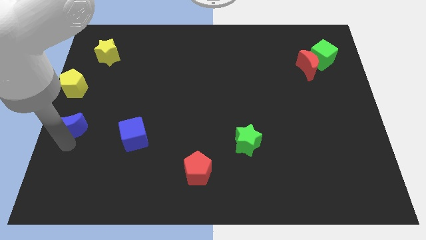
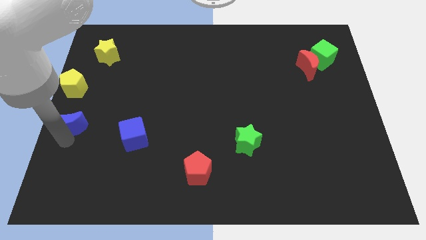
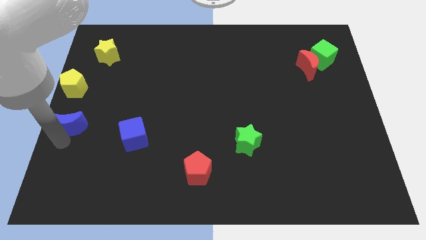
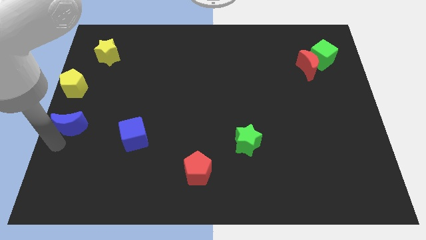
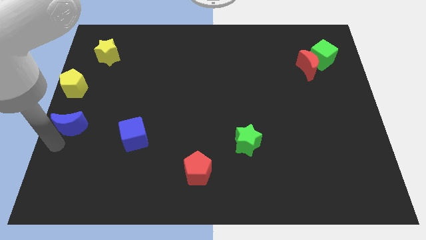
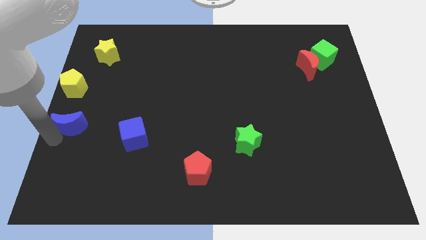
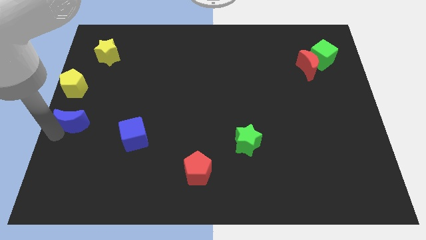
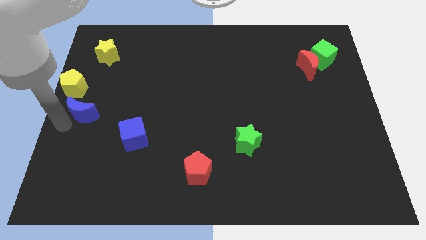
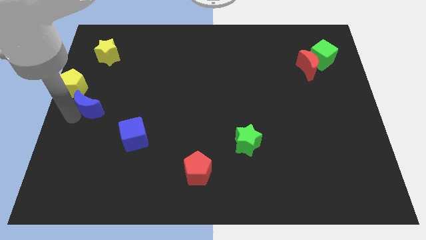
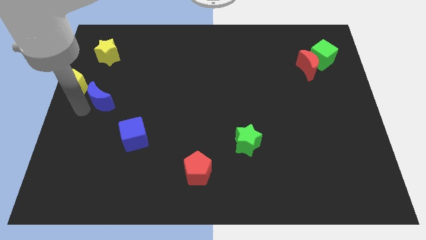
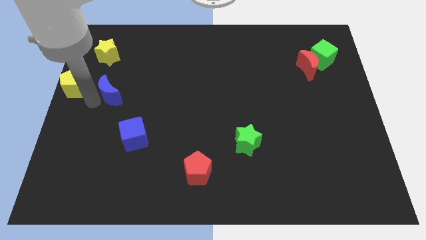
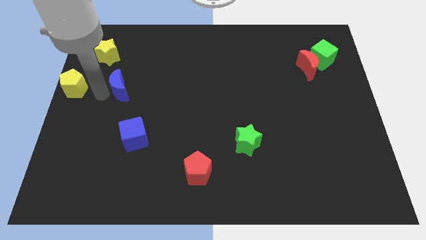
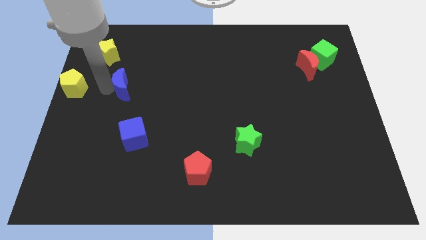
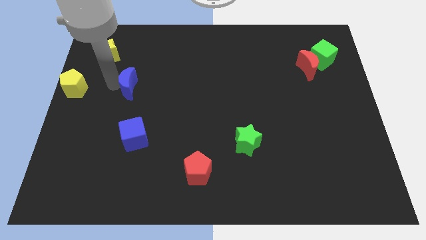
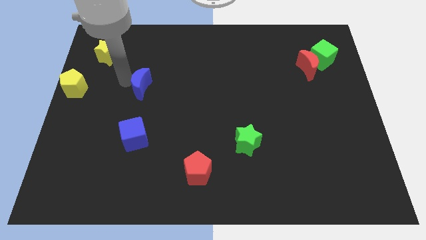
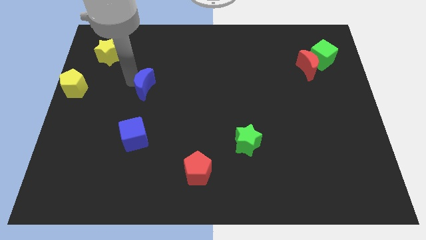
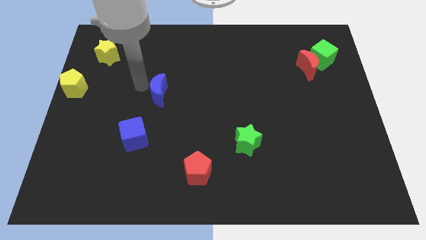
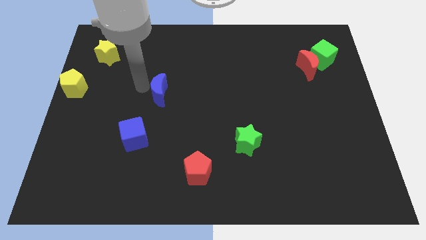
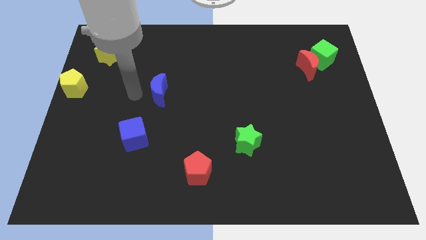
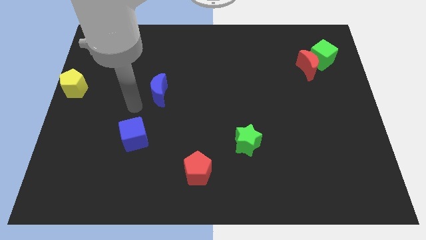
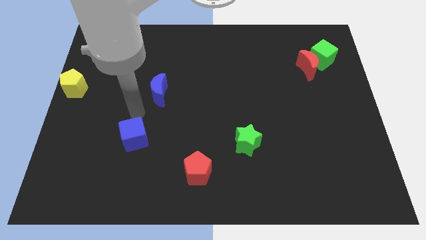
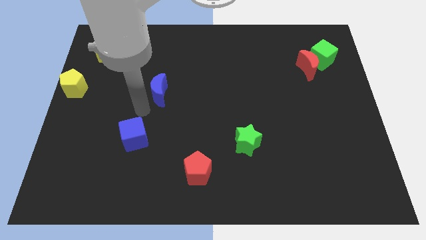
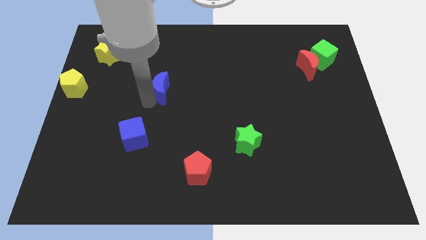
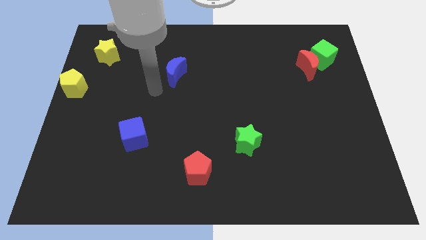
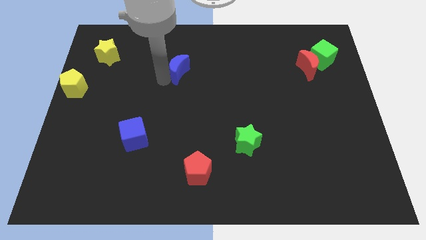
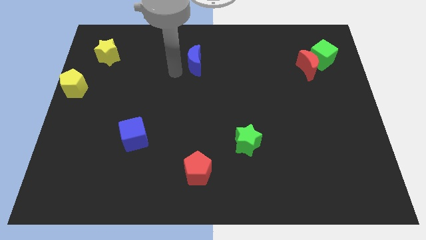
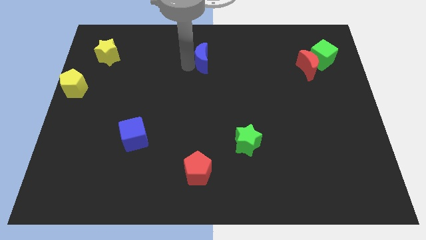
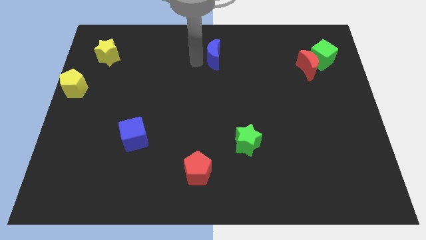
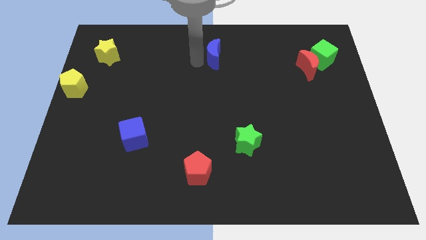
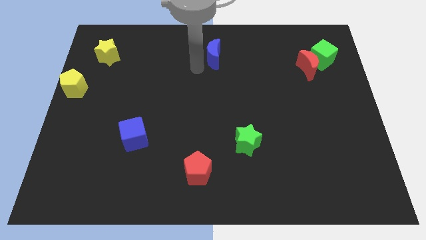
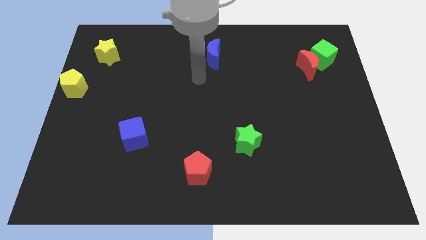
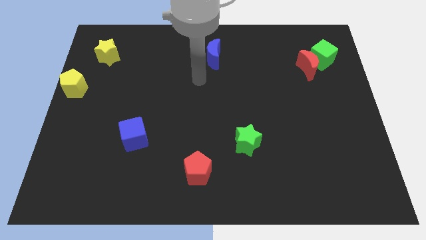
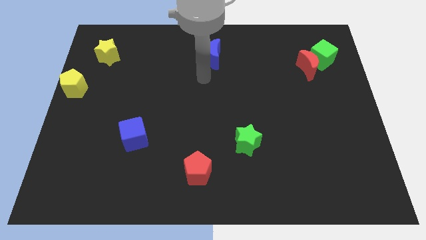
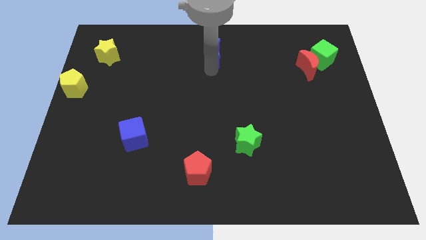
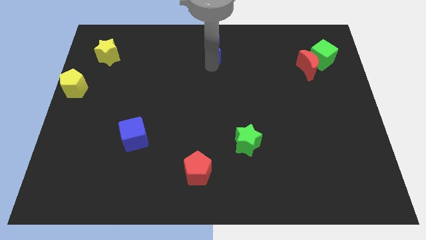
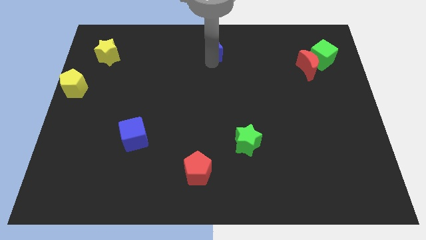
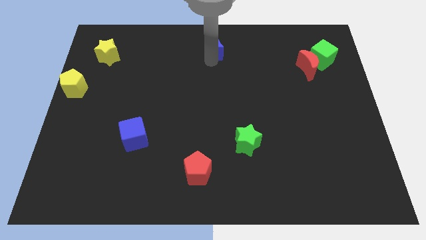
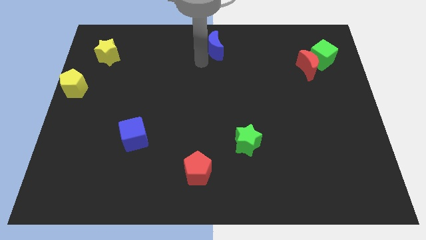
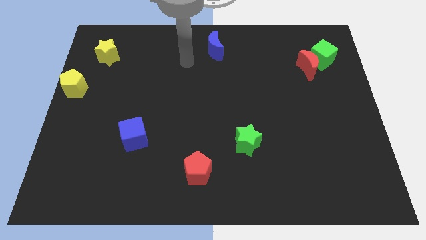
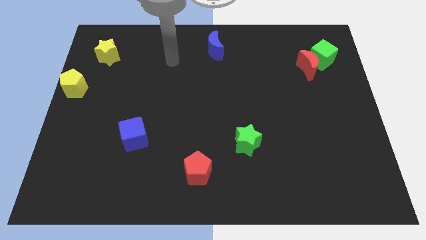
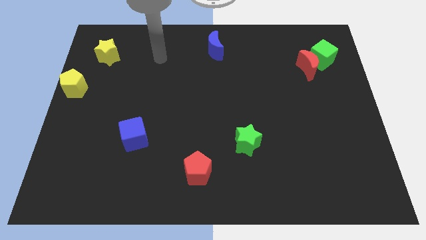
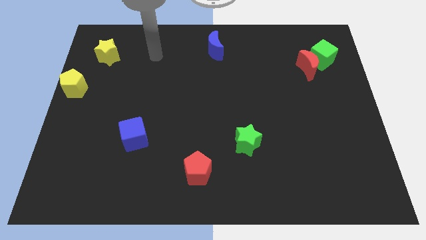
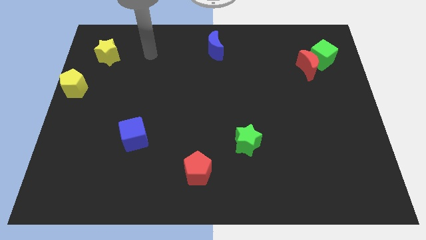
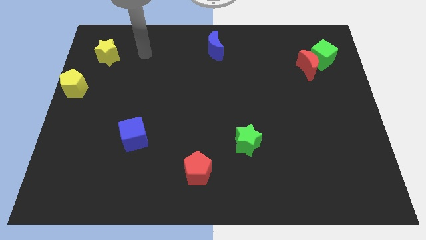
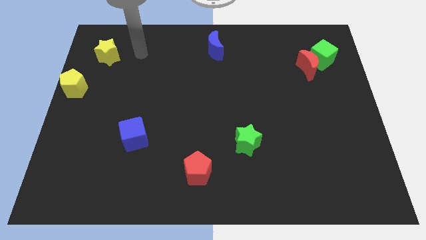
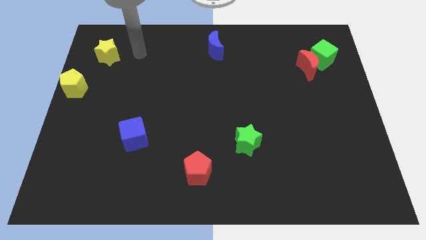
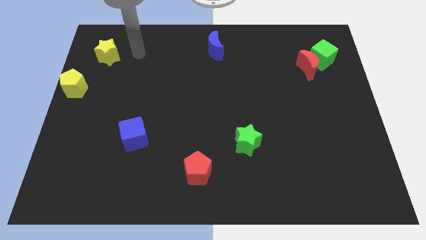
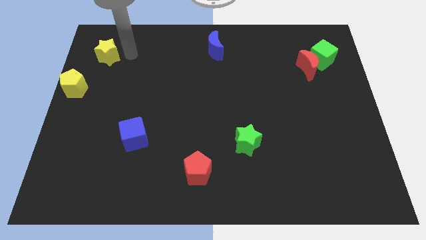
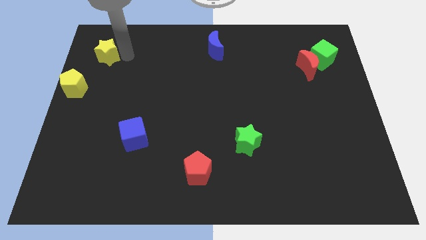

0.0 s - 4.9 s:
push blue crescent towards top center of the board

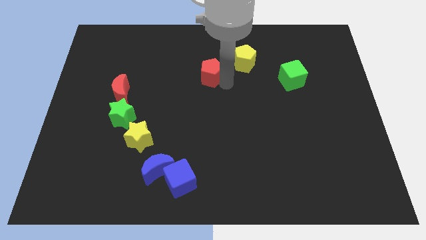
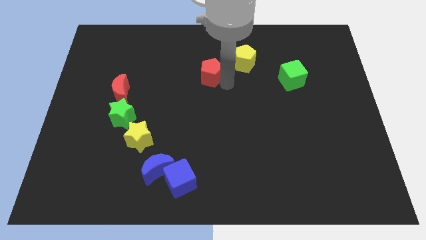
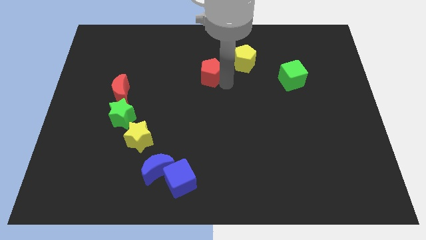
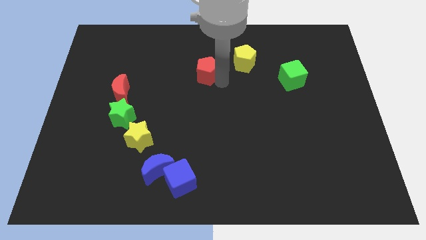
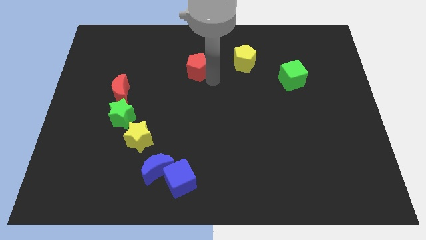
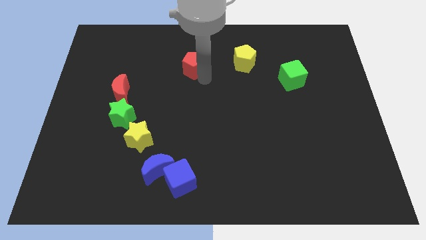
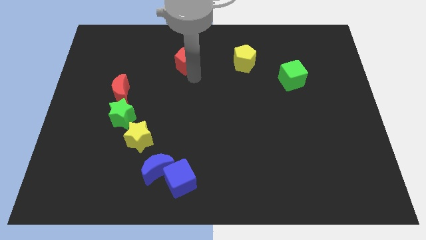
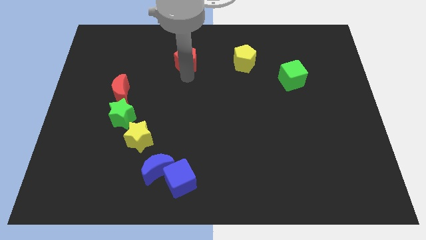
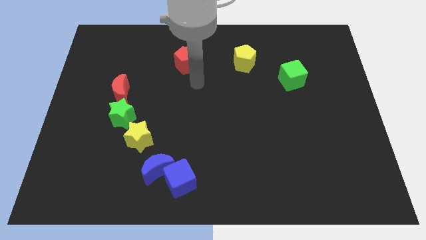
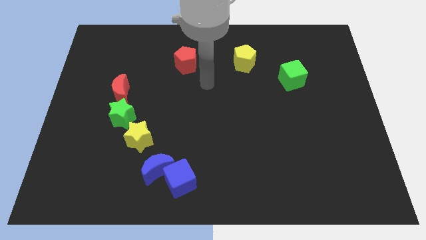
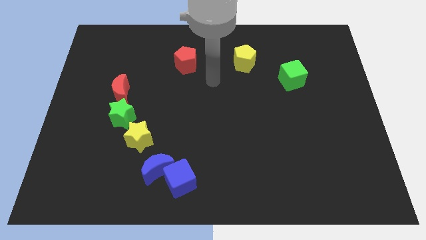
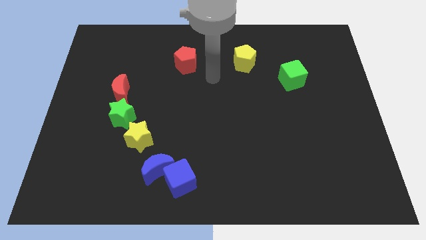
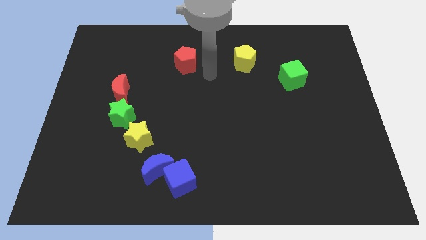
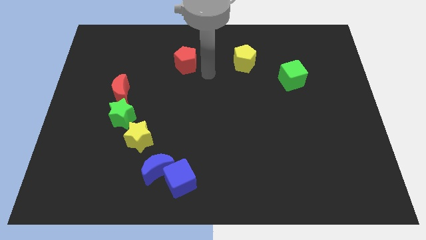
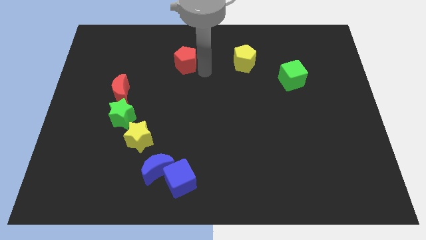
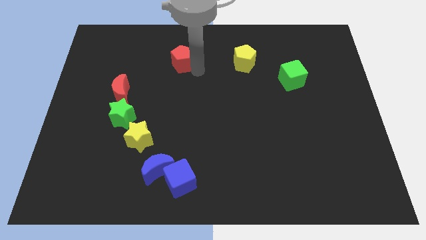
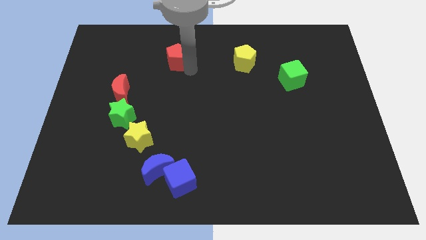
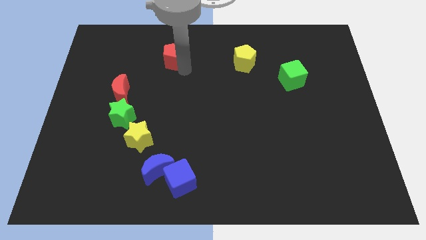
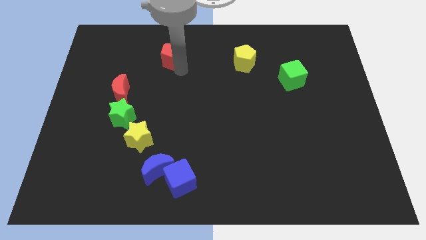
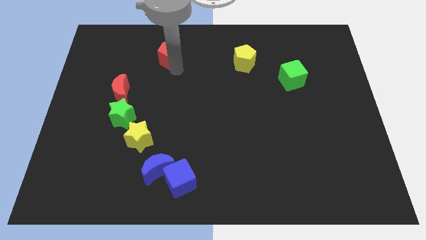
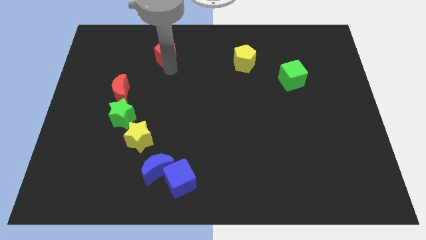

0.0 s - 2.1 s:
push the red pentagon towards the top side of the board

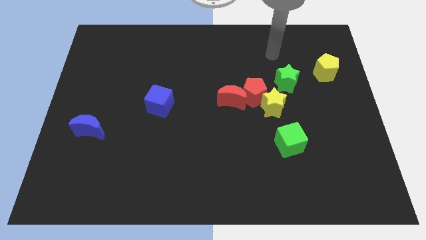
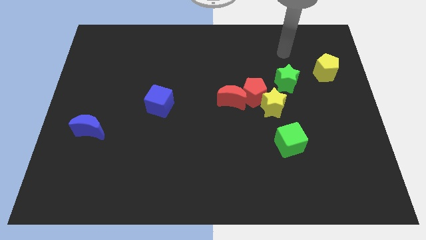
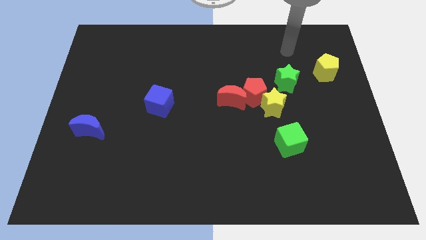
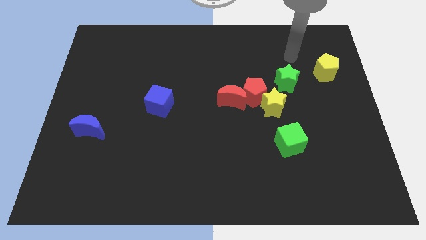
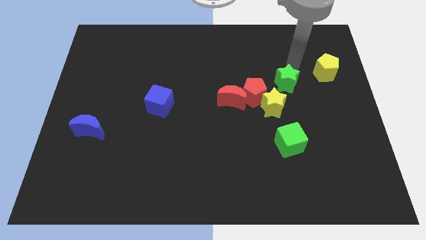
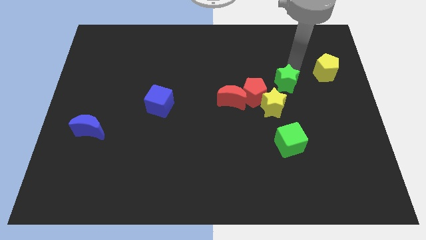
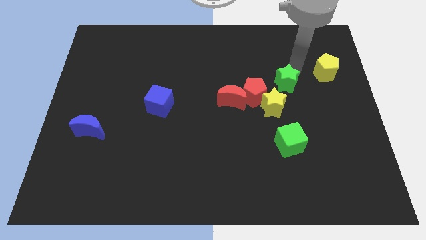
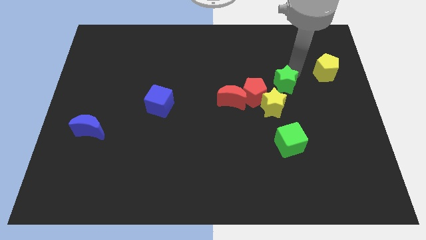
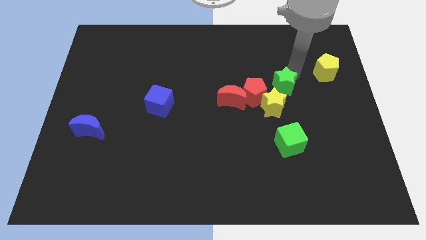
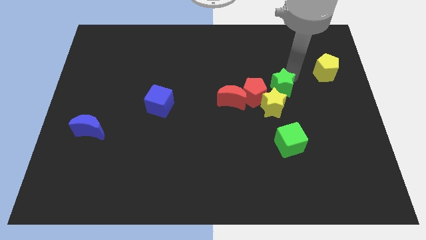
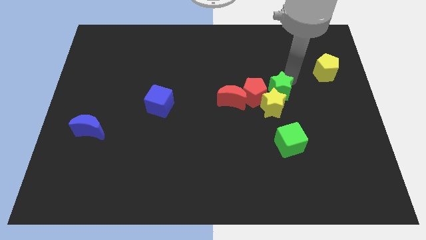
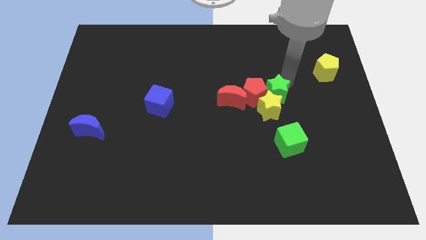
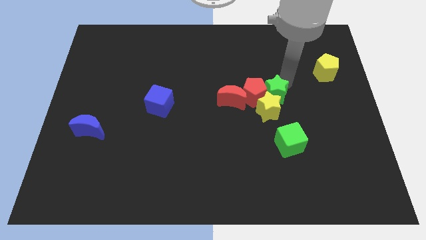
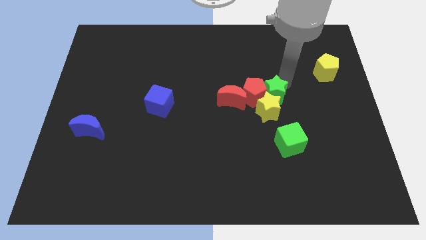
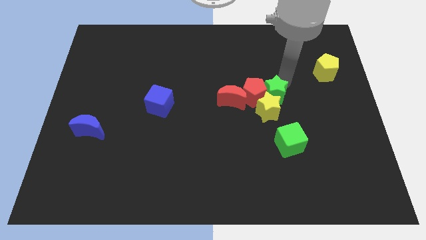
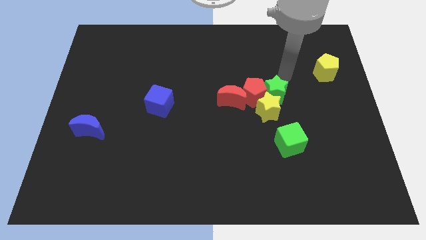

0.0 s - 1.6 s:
move the green star into the right side of the red pentagon

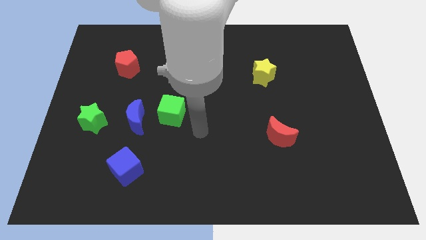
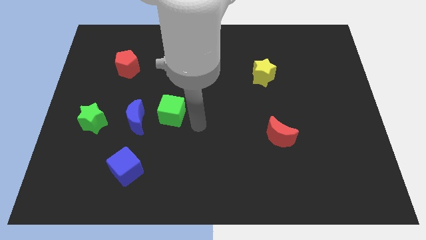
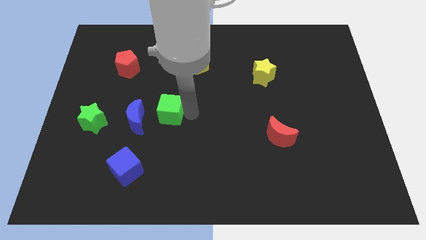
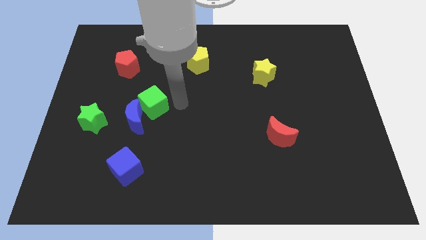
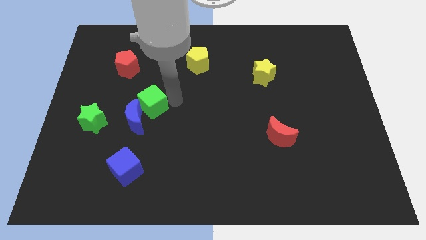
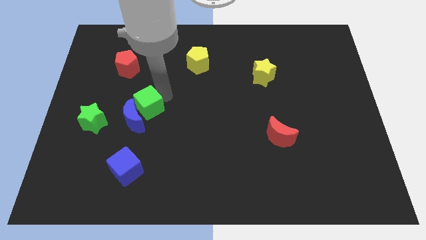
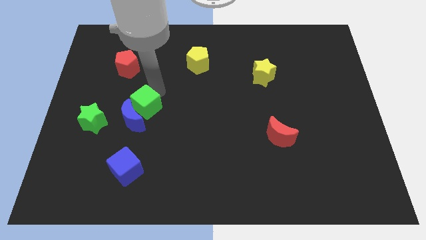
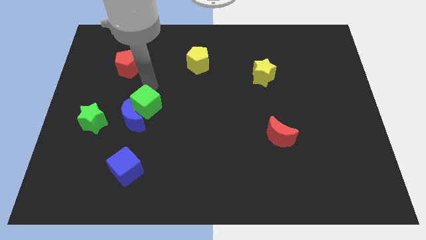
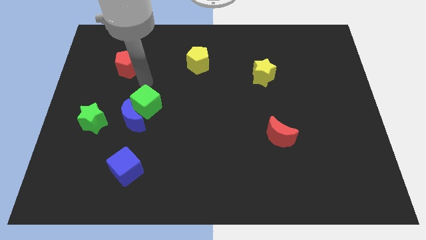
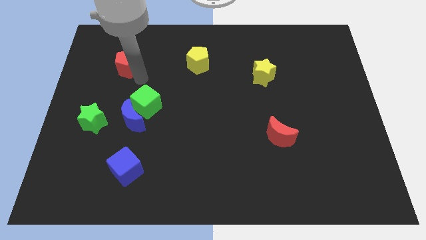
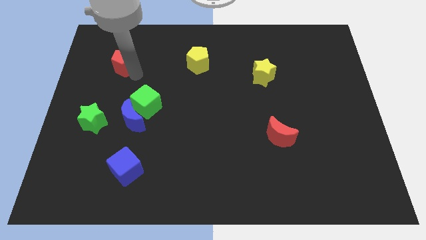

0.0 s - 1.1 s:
slightly push the green cube blue moon and red pentagon
